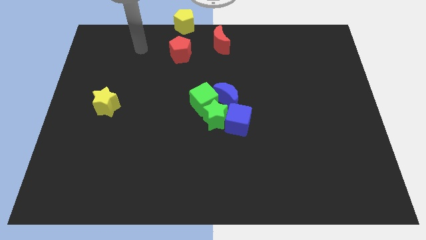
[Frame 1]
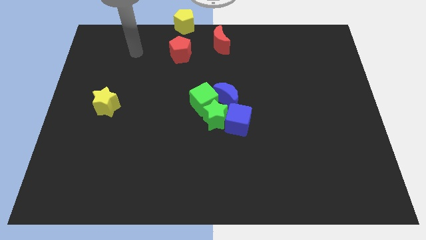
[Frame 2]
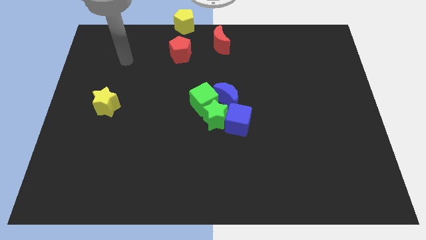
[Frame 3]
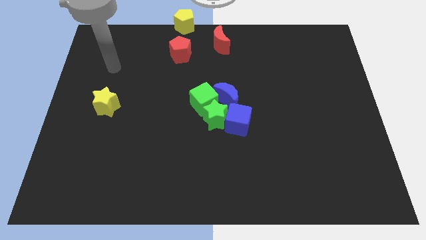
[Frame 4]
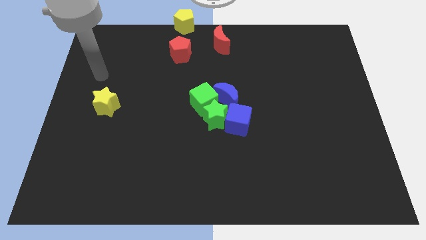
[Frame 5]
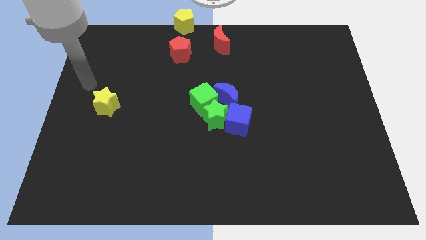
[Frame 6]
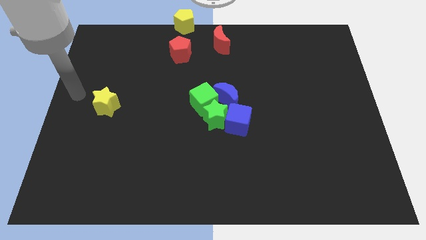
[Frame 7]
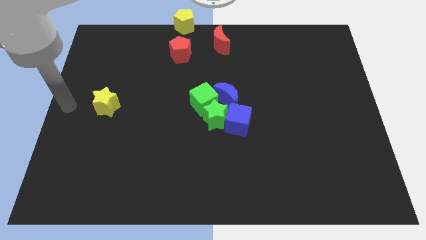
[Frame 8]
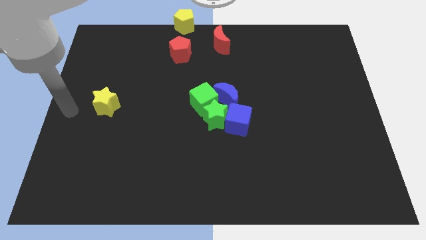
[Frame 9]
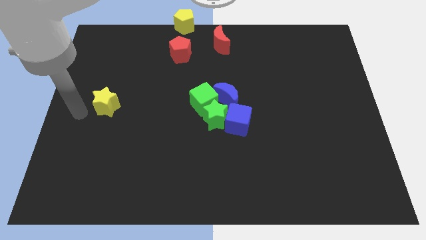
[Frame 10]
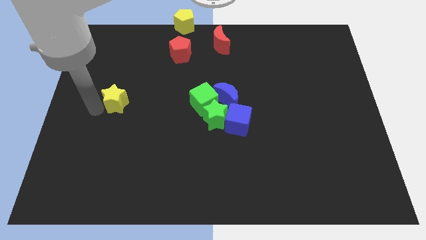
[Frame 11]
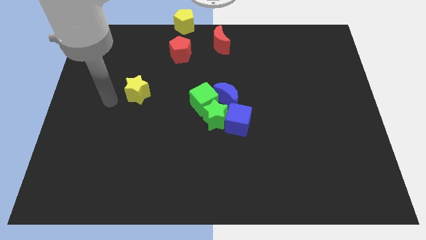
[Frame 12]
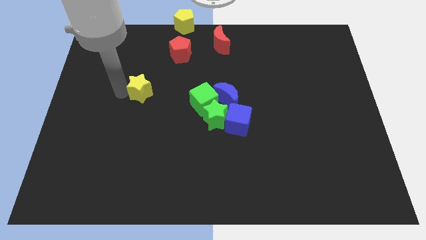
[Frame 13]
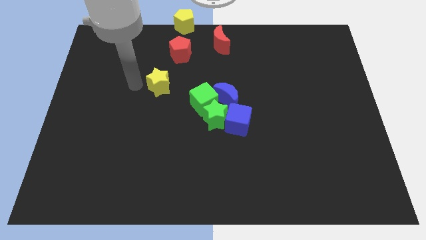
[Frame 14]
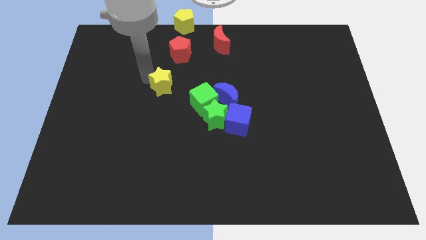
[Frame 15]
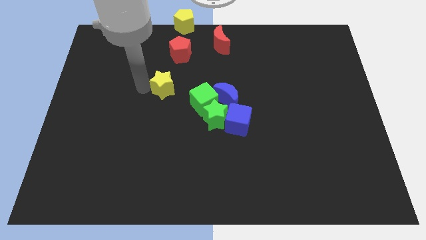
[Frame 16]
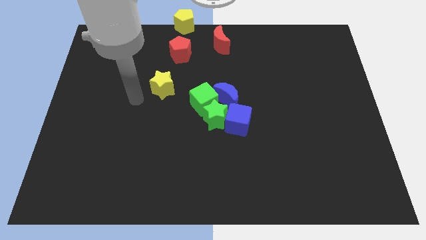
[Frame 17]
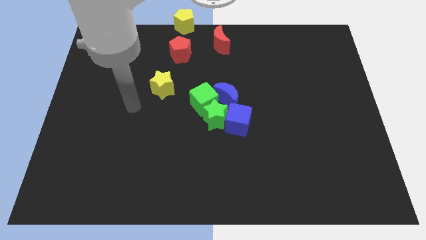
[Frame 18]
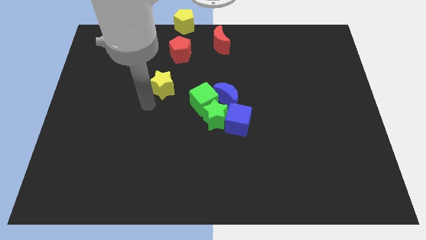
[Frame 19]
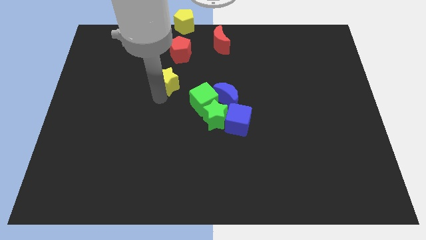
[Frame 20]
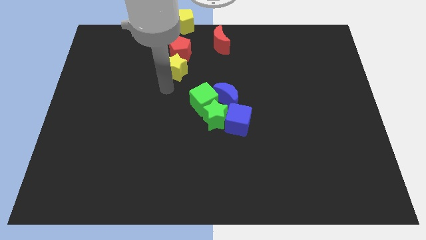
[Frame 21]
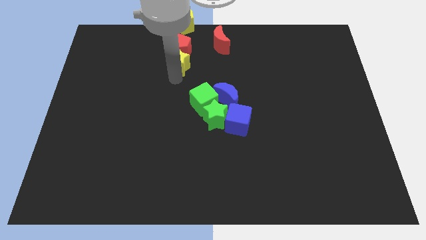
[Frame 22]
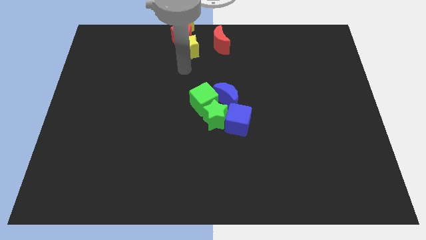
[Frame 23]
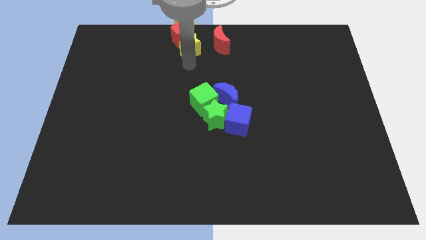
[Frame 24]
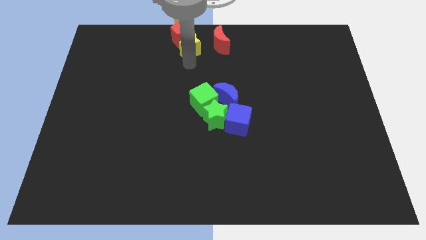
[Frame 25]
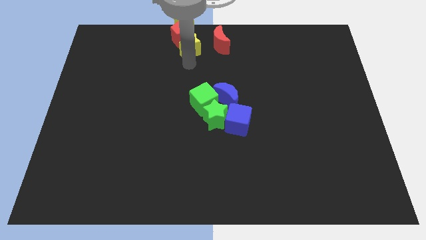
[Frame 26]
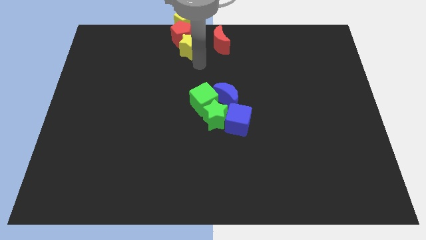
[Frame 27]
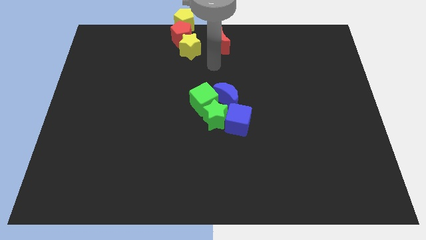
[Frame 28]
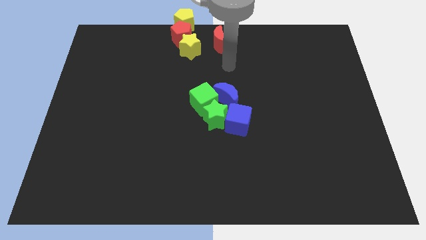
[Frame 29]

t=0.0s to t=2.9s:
move the yellow star into the red pentagon

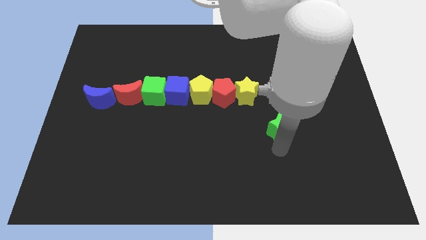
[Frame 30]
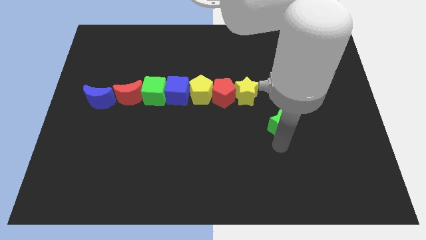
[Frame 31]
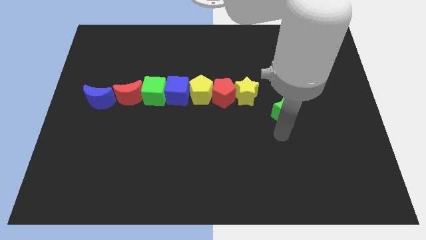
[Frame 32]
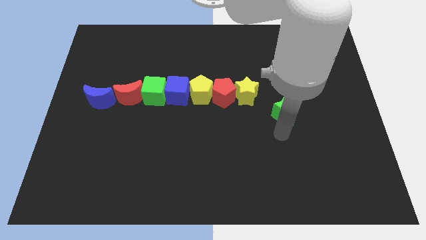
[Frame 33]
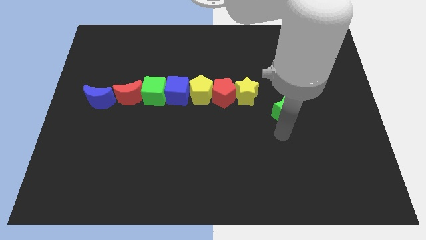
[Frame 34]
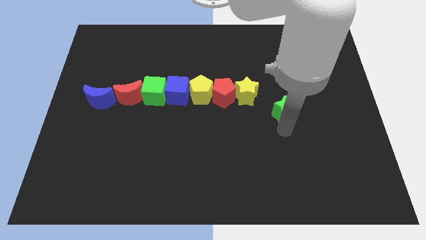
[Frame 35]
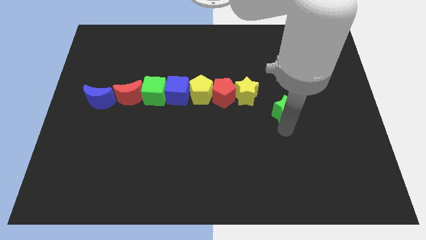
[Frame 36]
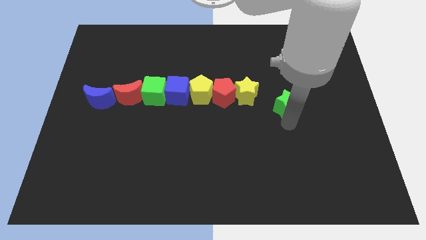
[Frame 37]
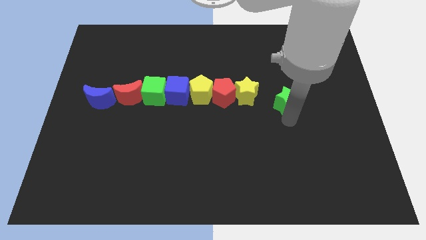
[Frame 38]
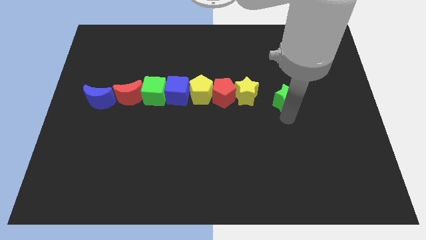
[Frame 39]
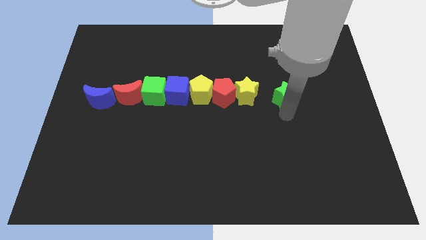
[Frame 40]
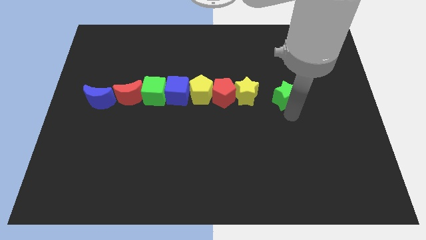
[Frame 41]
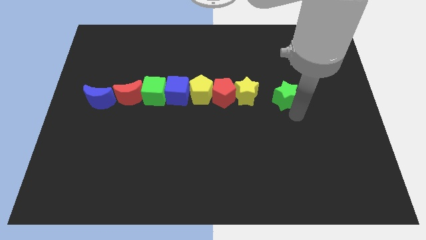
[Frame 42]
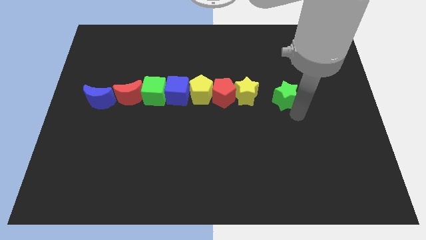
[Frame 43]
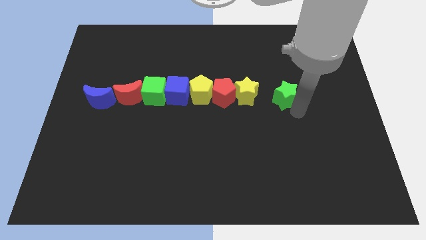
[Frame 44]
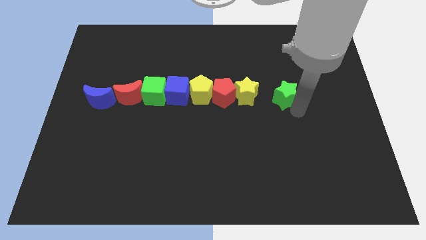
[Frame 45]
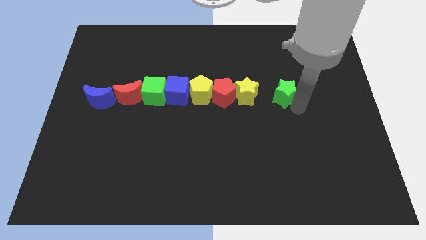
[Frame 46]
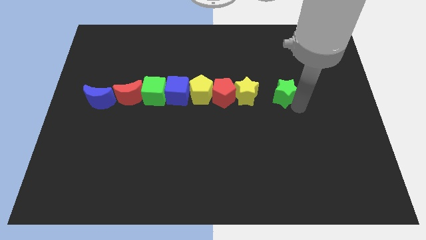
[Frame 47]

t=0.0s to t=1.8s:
place the green star to the right of the yellow star

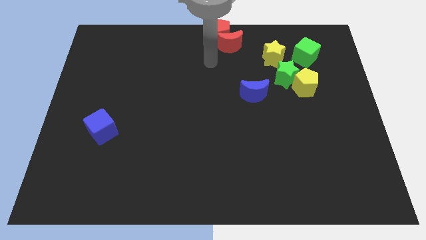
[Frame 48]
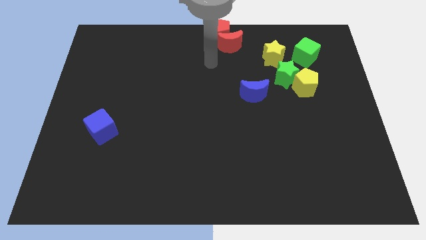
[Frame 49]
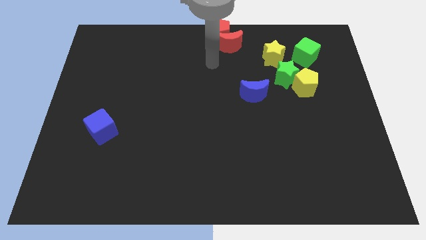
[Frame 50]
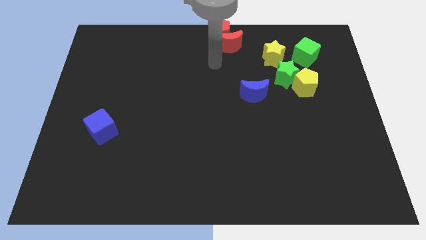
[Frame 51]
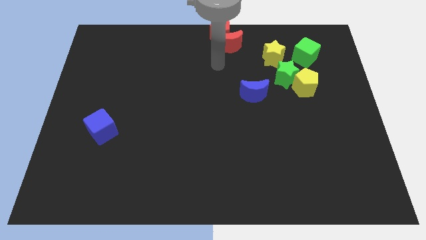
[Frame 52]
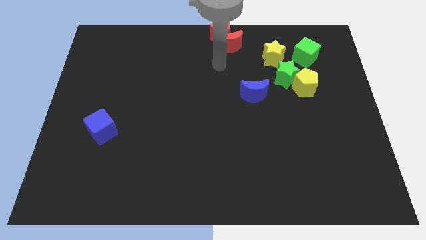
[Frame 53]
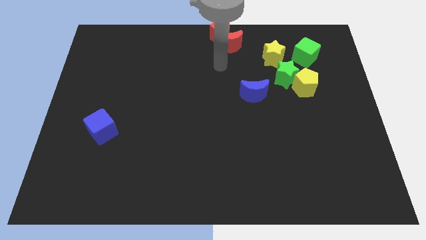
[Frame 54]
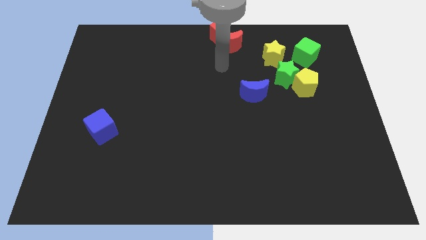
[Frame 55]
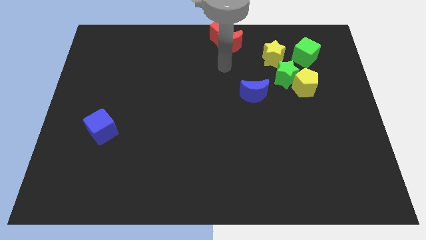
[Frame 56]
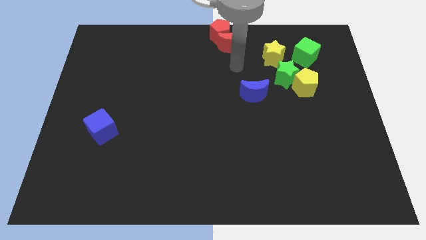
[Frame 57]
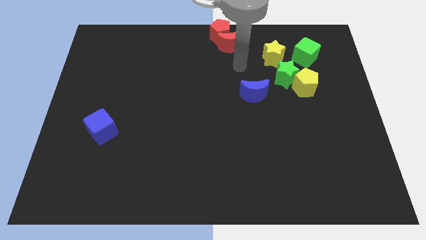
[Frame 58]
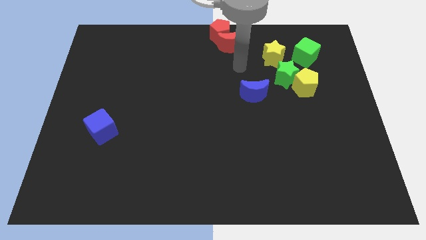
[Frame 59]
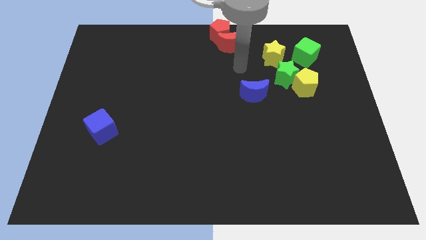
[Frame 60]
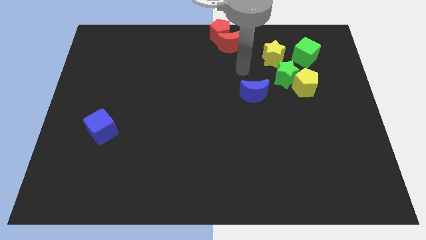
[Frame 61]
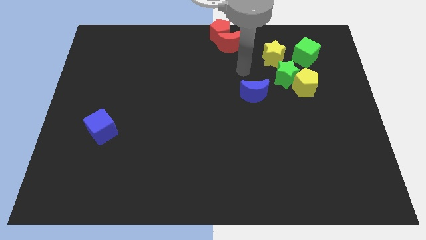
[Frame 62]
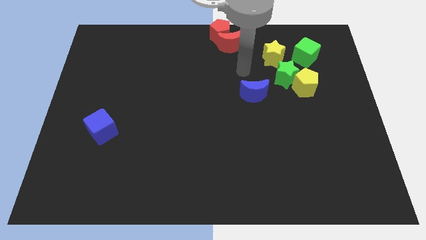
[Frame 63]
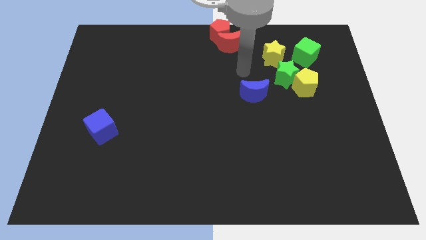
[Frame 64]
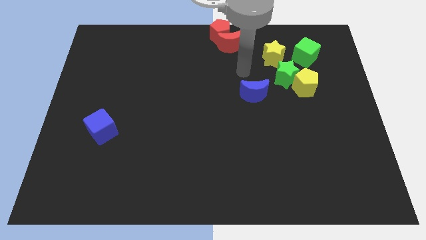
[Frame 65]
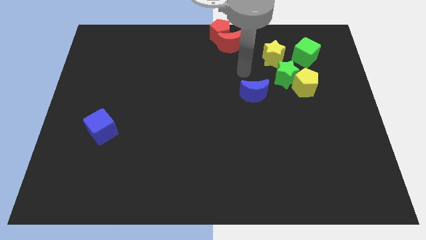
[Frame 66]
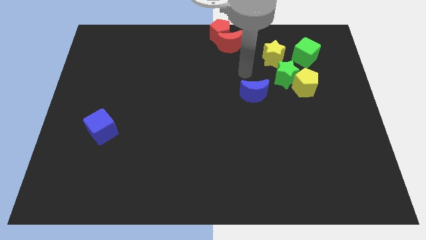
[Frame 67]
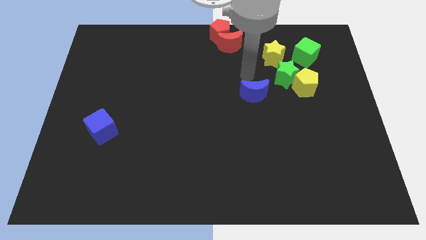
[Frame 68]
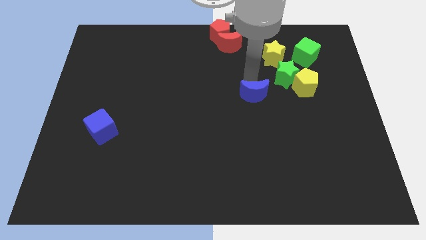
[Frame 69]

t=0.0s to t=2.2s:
place your arm on the top of blue crescent

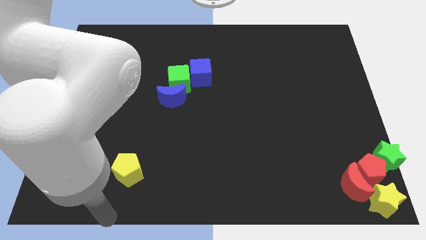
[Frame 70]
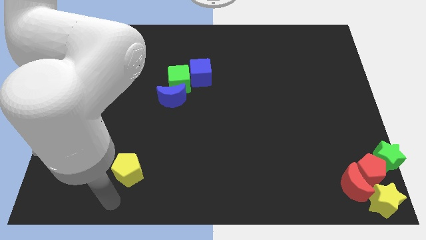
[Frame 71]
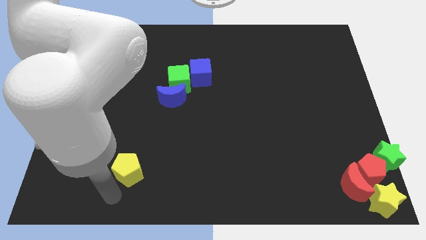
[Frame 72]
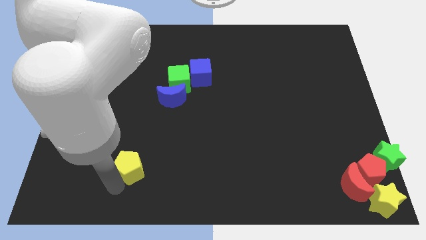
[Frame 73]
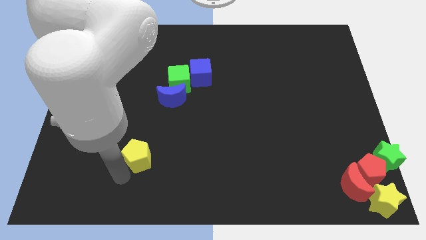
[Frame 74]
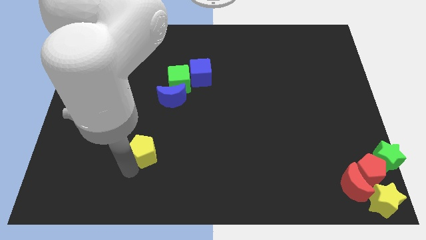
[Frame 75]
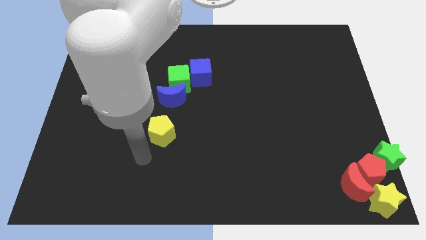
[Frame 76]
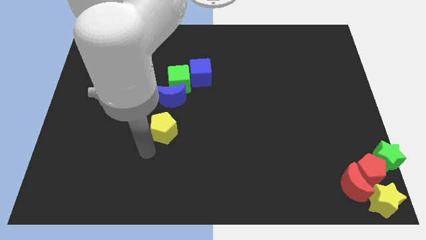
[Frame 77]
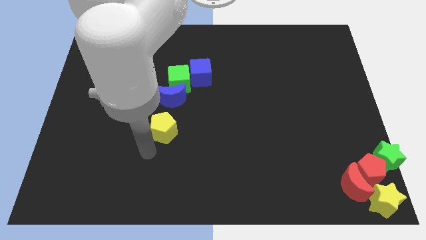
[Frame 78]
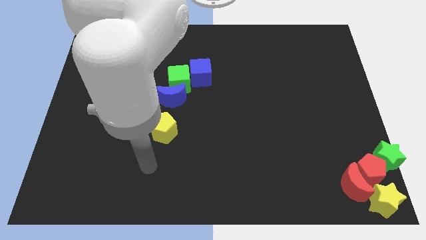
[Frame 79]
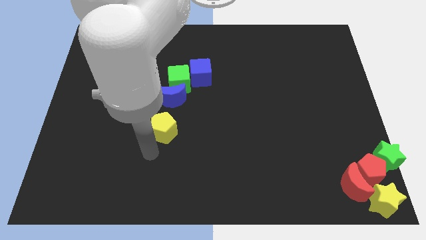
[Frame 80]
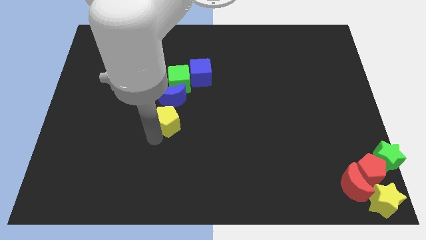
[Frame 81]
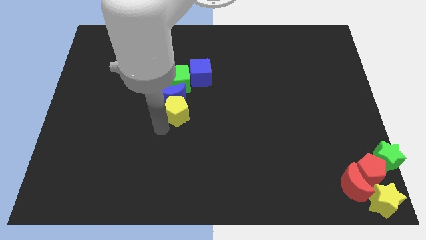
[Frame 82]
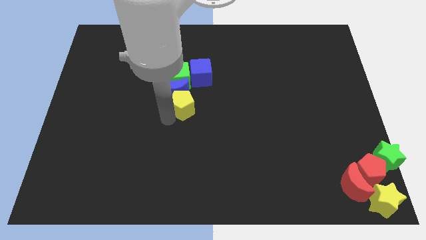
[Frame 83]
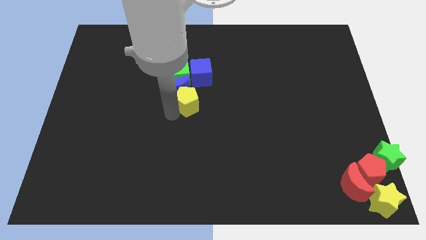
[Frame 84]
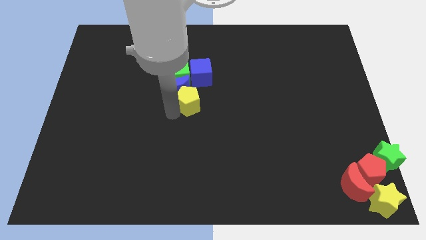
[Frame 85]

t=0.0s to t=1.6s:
push yellow pentagon to the bottom left side of the blue moon

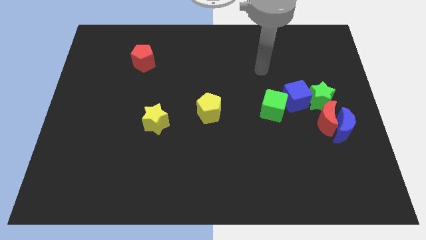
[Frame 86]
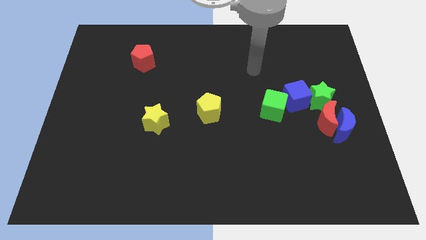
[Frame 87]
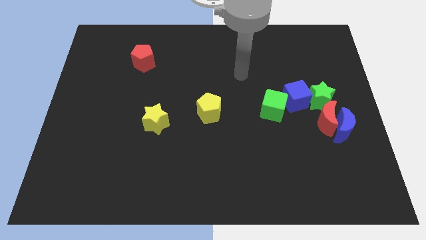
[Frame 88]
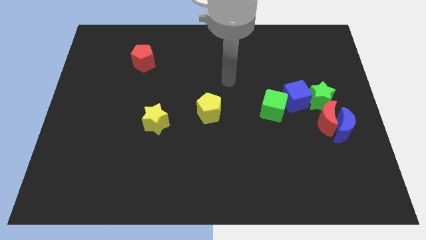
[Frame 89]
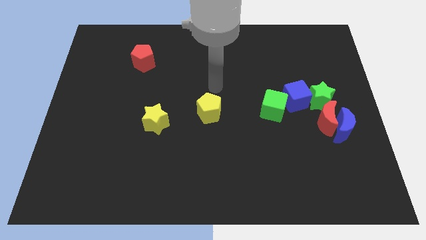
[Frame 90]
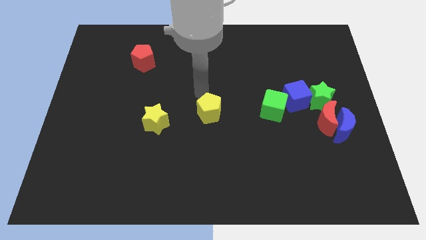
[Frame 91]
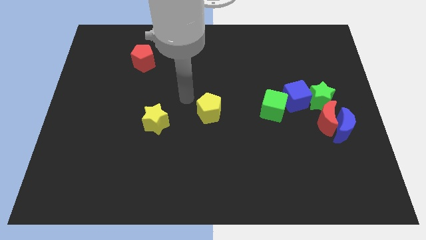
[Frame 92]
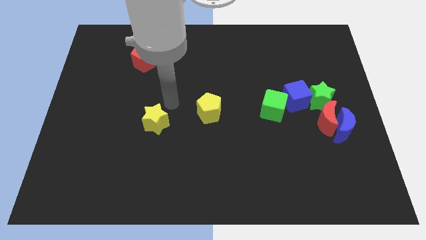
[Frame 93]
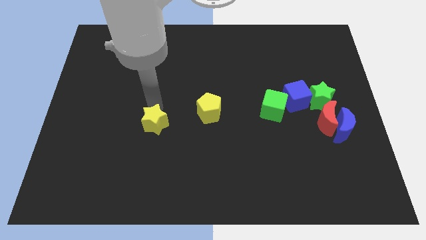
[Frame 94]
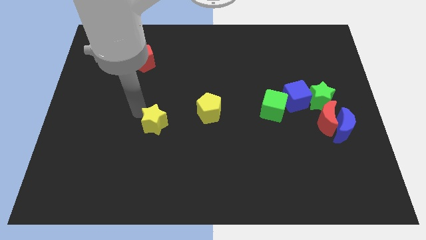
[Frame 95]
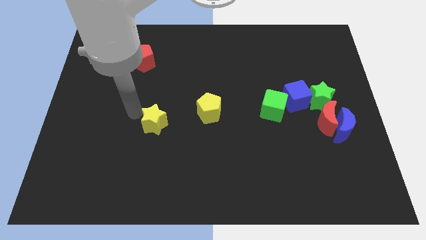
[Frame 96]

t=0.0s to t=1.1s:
slightly touch yellow star with your arm
